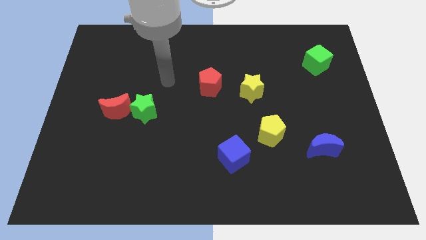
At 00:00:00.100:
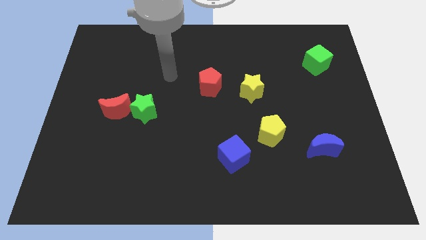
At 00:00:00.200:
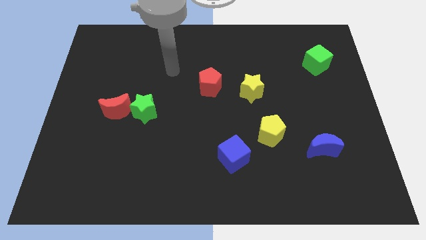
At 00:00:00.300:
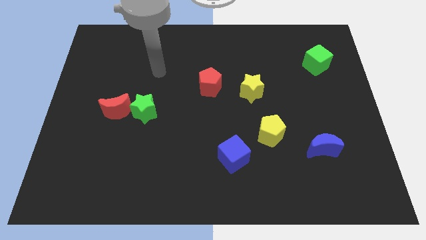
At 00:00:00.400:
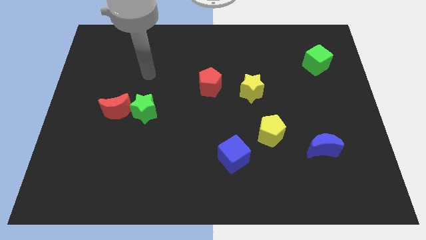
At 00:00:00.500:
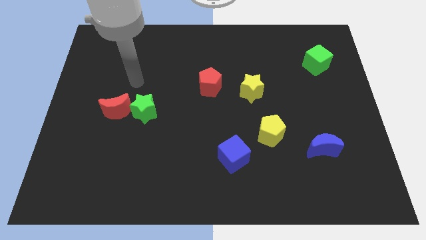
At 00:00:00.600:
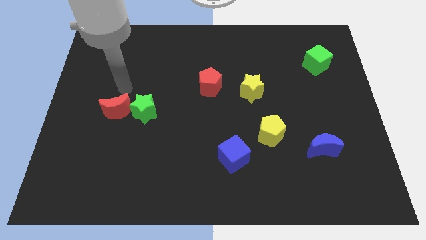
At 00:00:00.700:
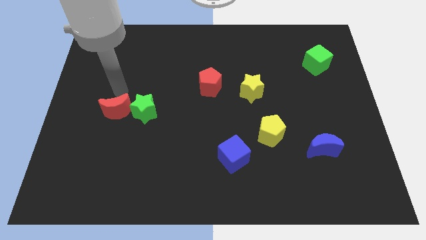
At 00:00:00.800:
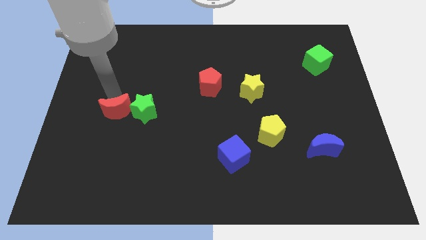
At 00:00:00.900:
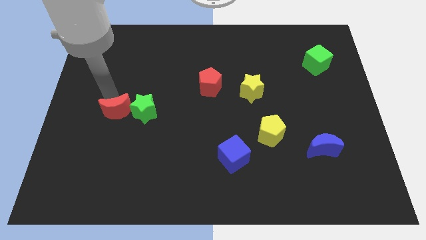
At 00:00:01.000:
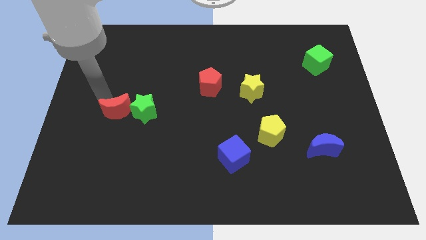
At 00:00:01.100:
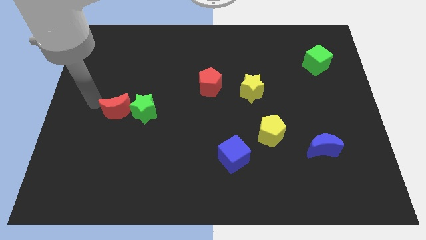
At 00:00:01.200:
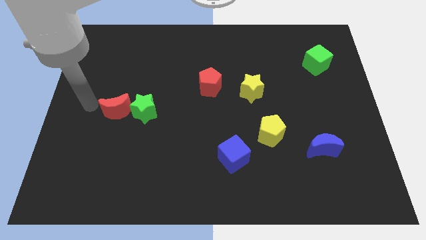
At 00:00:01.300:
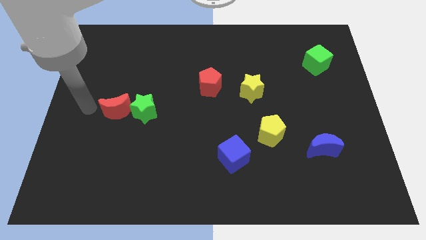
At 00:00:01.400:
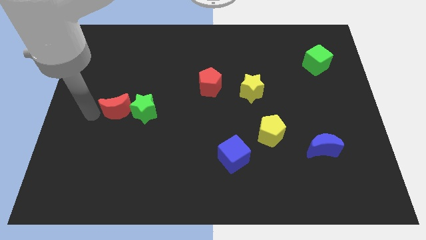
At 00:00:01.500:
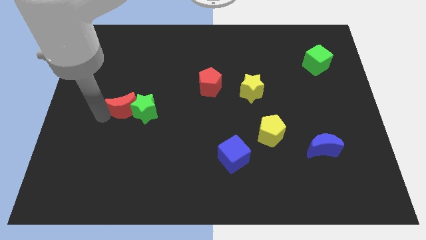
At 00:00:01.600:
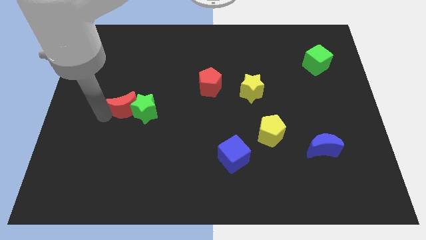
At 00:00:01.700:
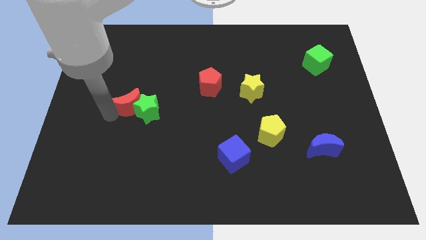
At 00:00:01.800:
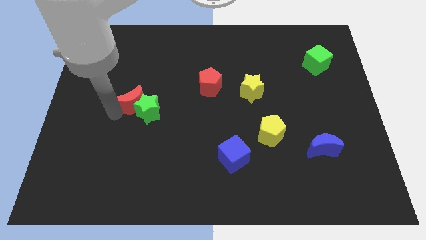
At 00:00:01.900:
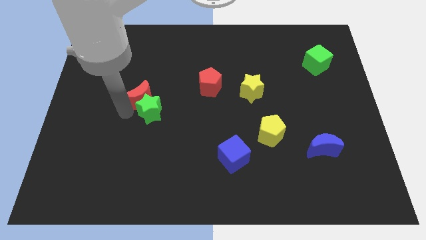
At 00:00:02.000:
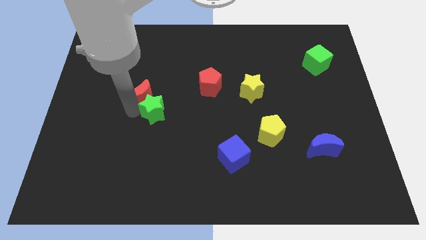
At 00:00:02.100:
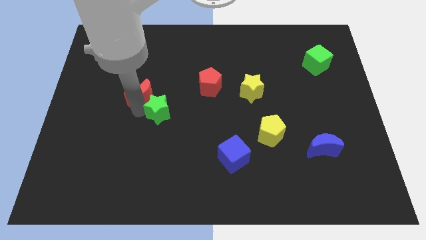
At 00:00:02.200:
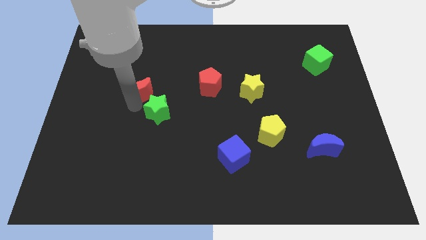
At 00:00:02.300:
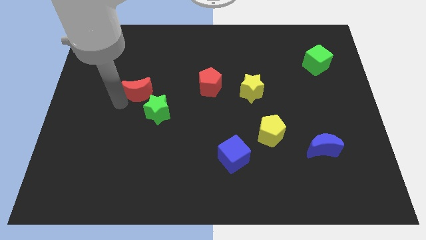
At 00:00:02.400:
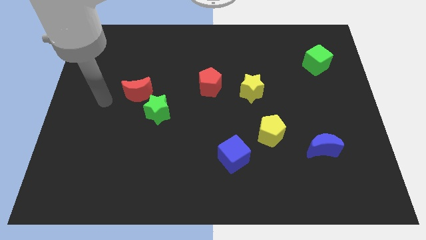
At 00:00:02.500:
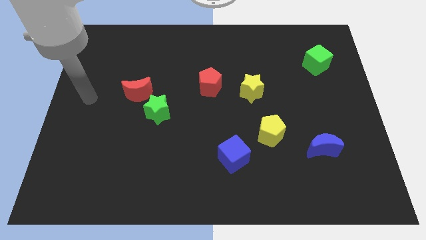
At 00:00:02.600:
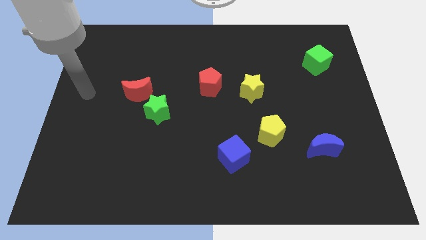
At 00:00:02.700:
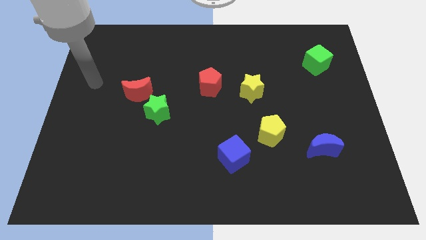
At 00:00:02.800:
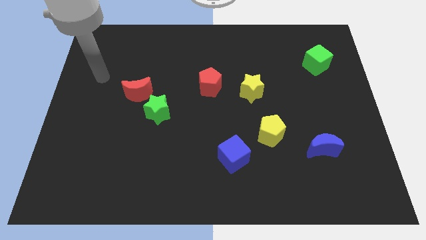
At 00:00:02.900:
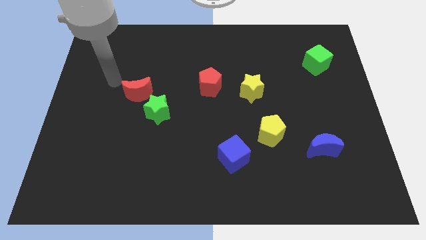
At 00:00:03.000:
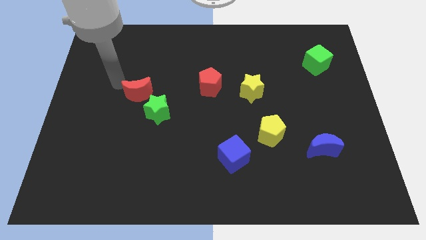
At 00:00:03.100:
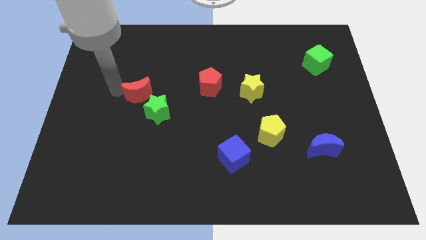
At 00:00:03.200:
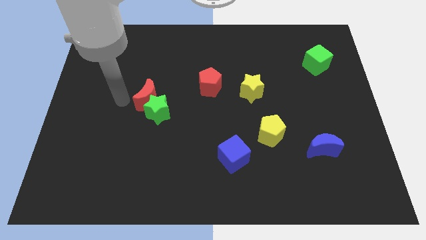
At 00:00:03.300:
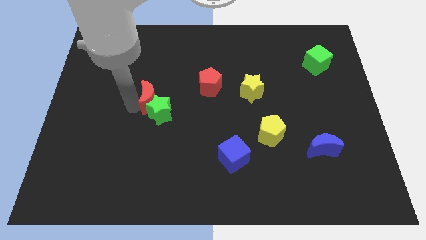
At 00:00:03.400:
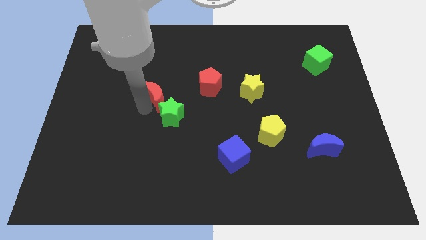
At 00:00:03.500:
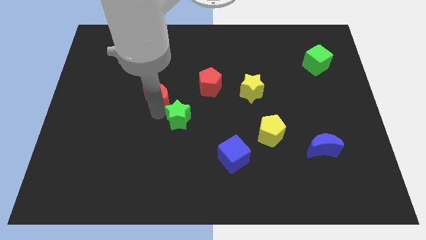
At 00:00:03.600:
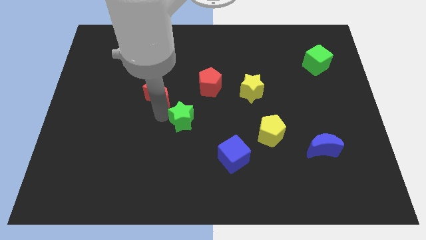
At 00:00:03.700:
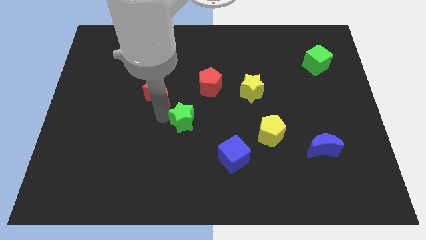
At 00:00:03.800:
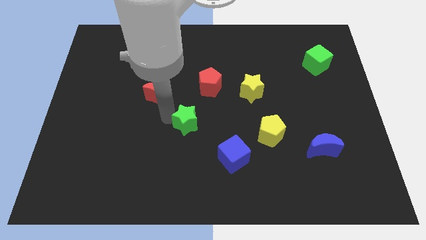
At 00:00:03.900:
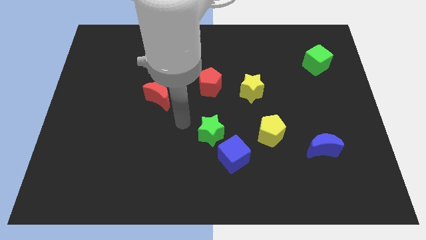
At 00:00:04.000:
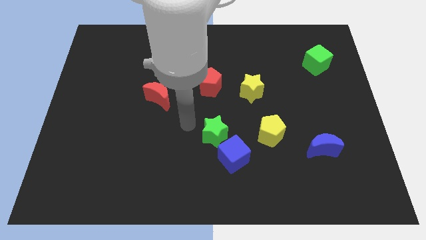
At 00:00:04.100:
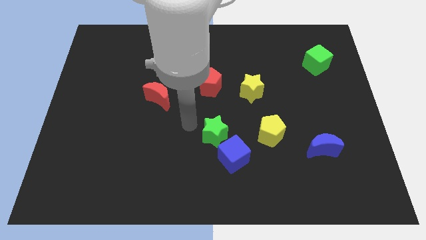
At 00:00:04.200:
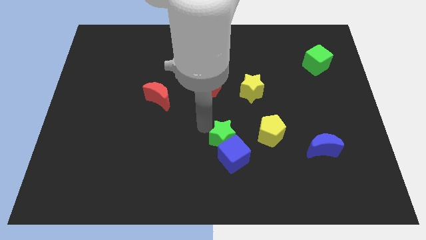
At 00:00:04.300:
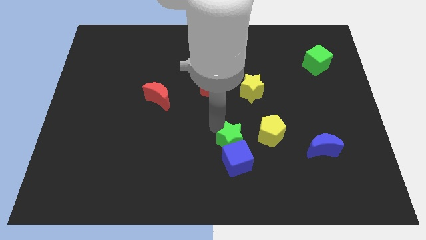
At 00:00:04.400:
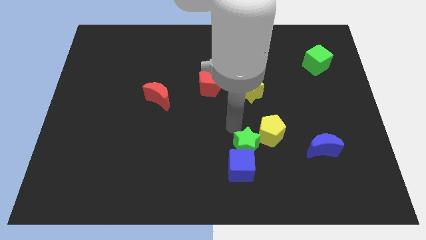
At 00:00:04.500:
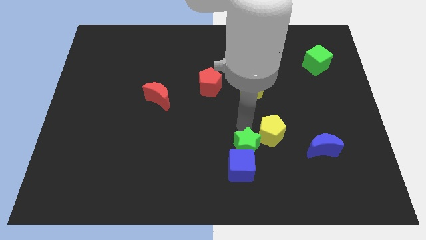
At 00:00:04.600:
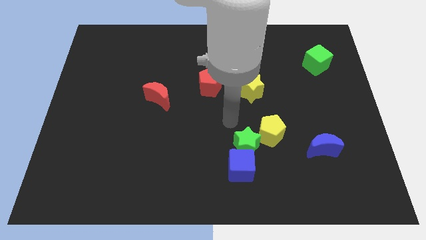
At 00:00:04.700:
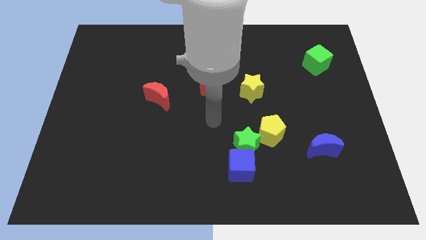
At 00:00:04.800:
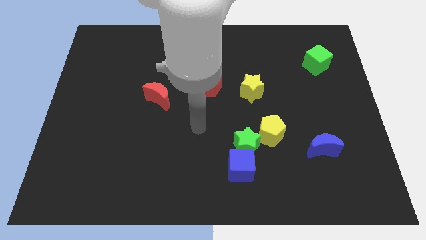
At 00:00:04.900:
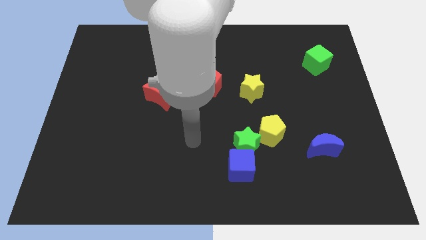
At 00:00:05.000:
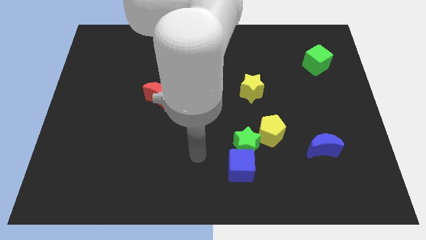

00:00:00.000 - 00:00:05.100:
push the green star towards the top of the blue cube at the center of the board

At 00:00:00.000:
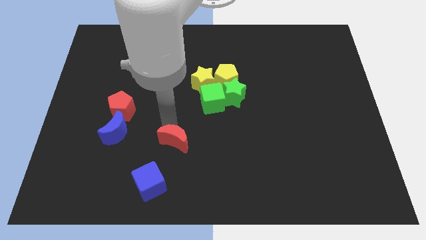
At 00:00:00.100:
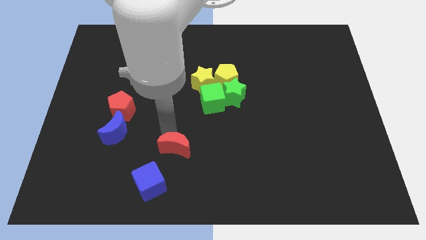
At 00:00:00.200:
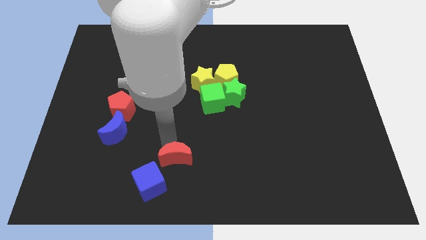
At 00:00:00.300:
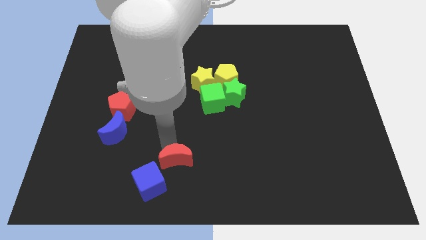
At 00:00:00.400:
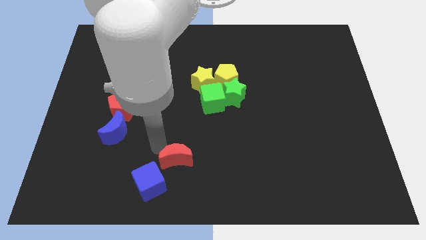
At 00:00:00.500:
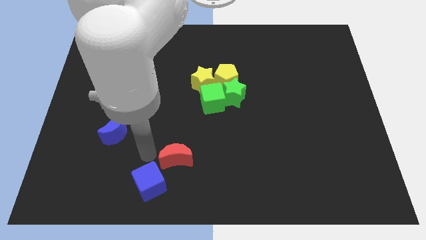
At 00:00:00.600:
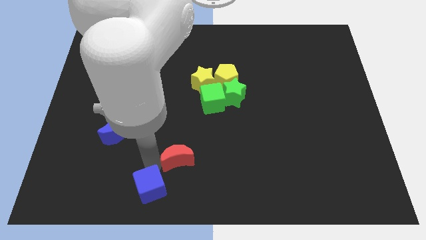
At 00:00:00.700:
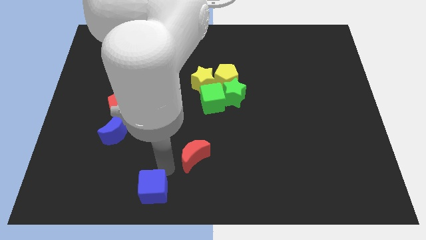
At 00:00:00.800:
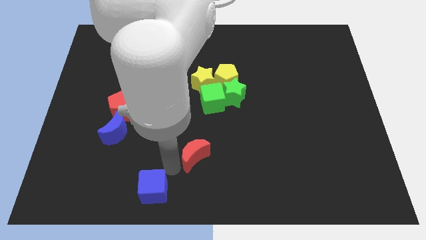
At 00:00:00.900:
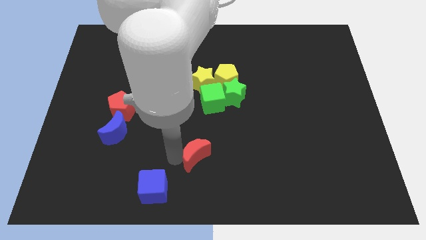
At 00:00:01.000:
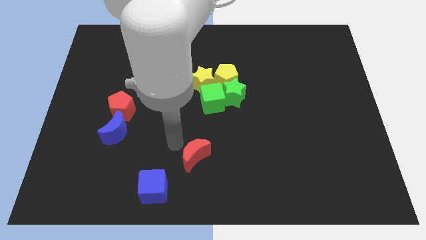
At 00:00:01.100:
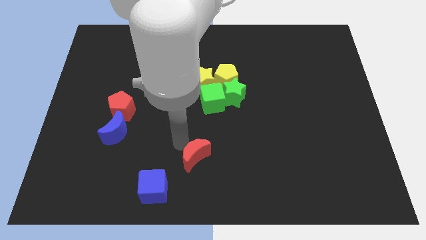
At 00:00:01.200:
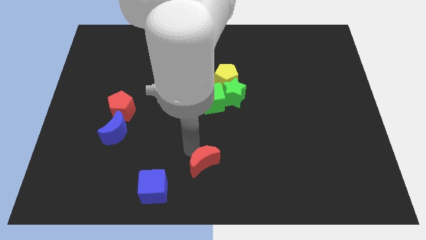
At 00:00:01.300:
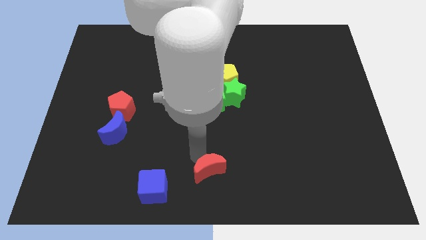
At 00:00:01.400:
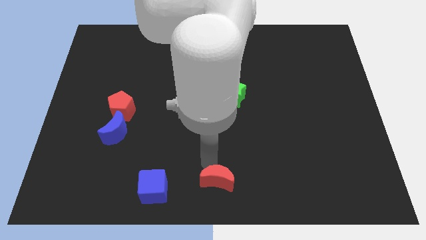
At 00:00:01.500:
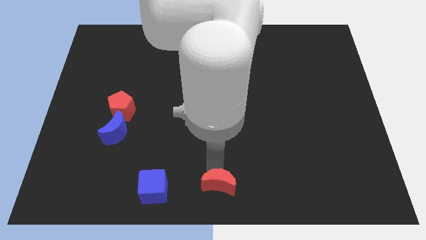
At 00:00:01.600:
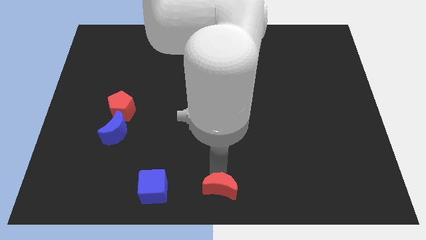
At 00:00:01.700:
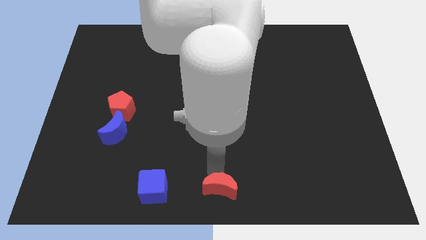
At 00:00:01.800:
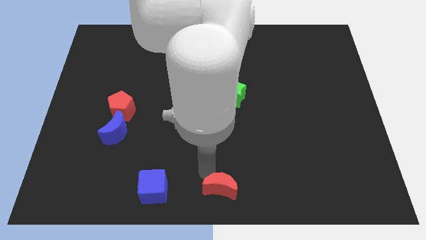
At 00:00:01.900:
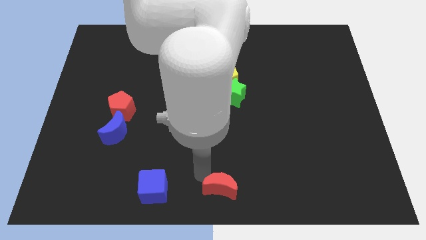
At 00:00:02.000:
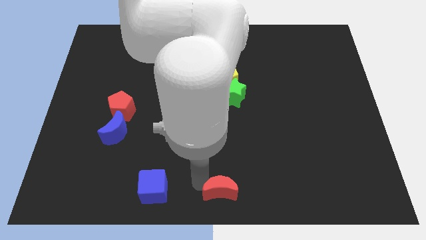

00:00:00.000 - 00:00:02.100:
push the red moon to the bottom center

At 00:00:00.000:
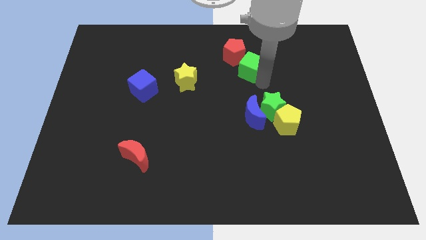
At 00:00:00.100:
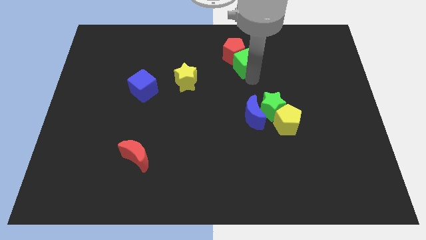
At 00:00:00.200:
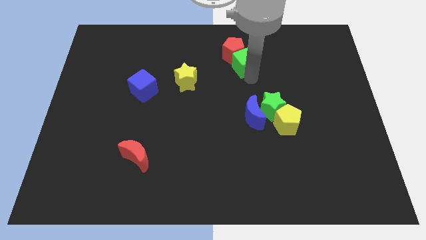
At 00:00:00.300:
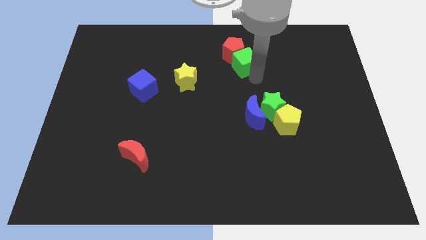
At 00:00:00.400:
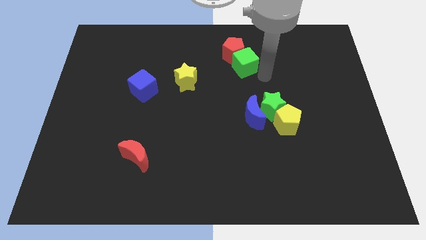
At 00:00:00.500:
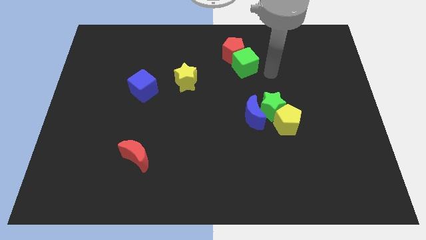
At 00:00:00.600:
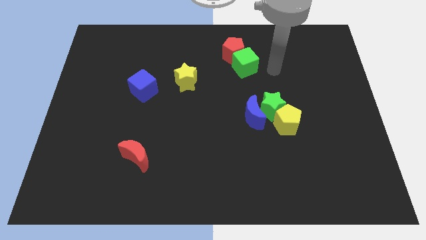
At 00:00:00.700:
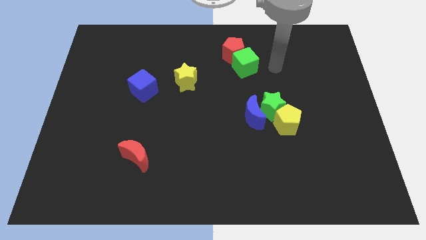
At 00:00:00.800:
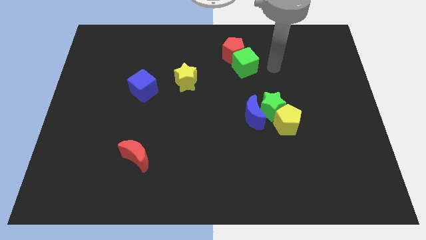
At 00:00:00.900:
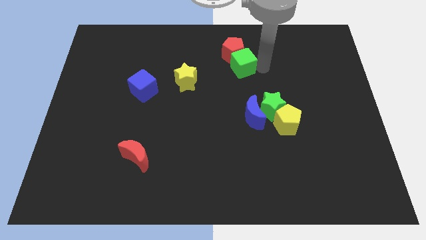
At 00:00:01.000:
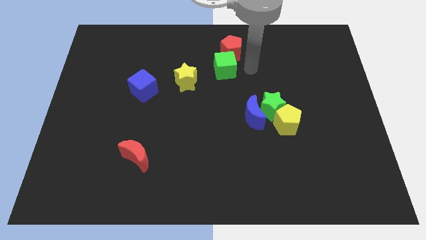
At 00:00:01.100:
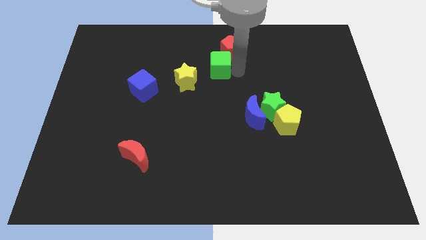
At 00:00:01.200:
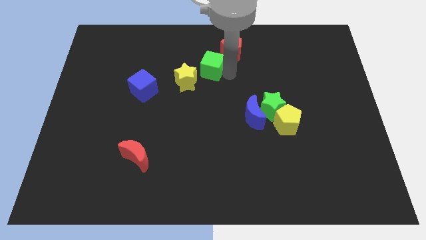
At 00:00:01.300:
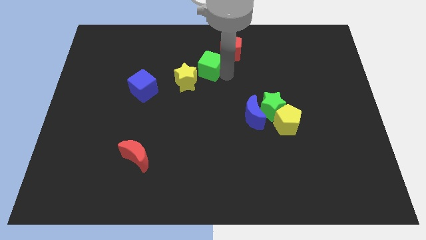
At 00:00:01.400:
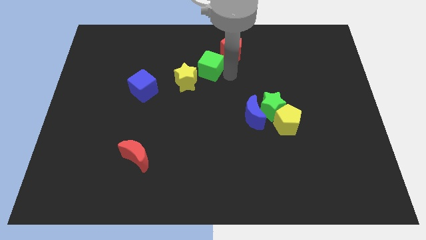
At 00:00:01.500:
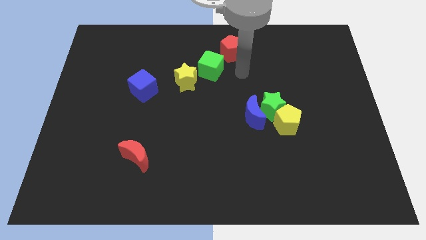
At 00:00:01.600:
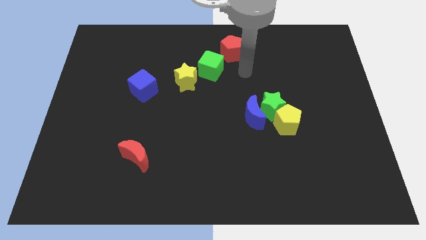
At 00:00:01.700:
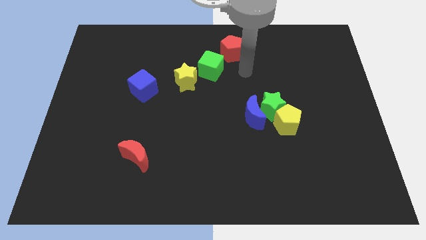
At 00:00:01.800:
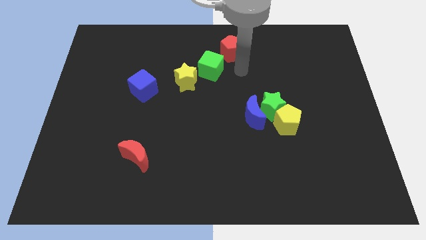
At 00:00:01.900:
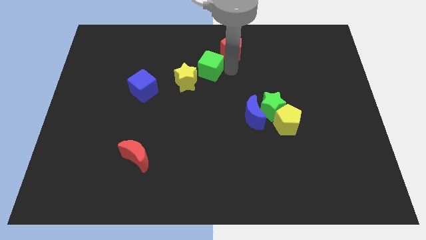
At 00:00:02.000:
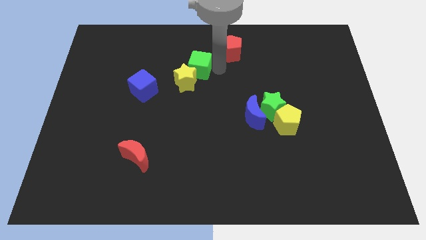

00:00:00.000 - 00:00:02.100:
place the green cube to the top right of the yellow star
